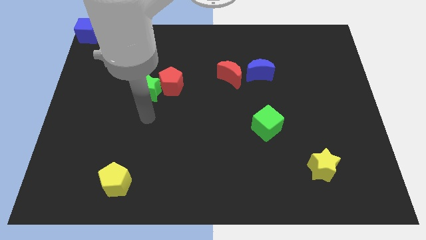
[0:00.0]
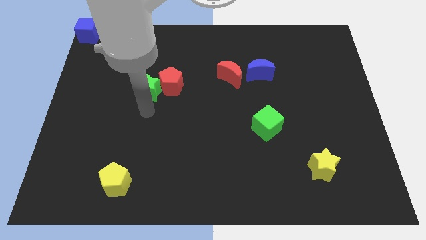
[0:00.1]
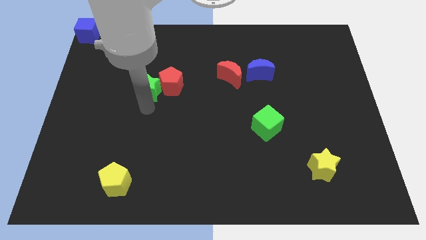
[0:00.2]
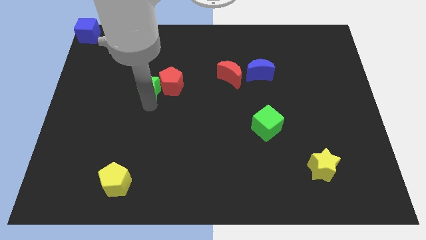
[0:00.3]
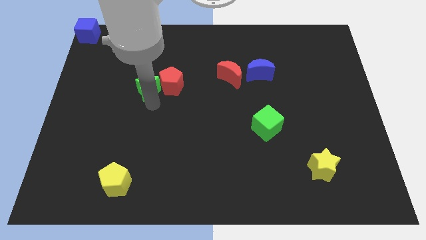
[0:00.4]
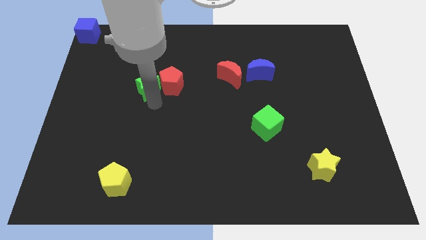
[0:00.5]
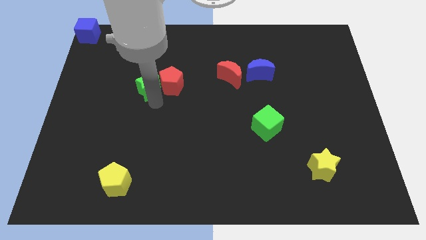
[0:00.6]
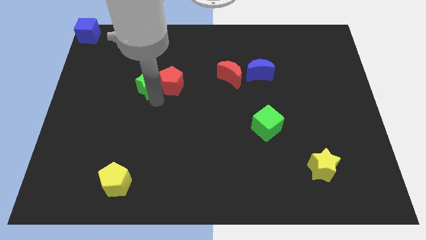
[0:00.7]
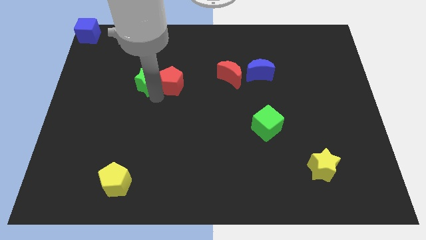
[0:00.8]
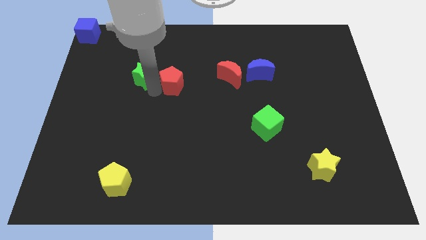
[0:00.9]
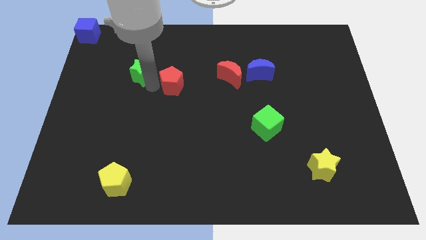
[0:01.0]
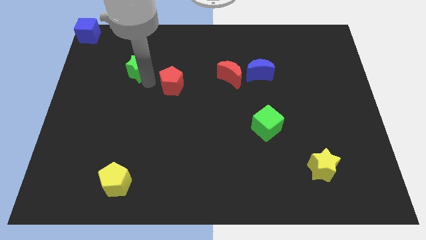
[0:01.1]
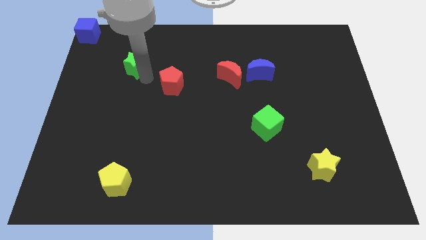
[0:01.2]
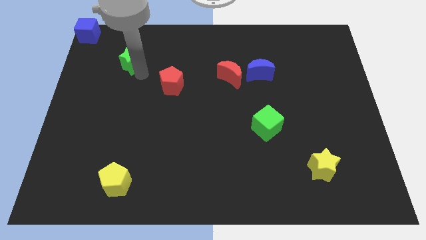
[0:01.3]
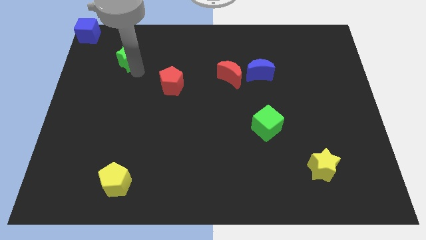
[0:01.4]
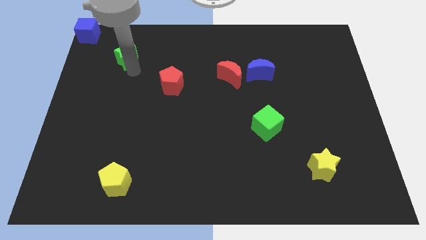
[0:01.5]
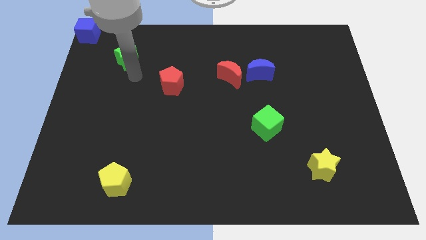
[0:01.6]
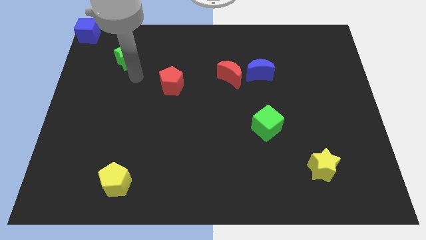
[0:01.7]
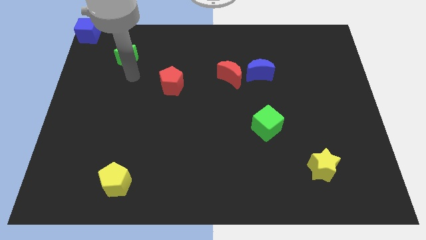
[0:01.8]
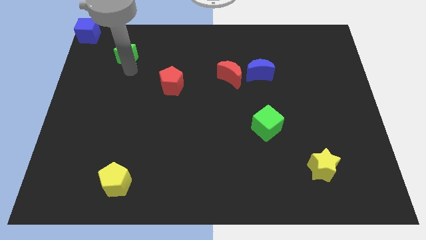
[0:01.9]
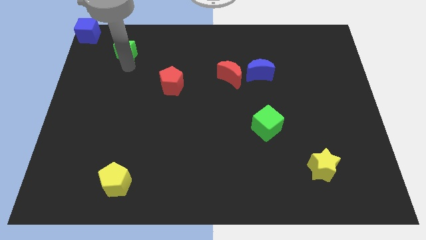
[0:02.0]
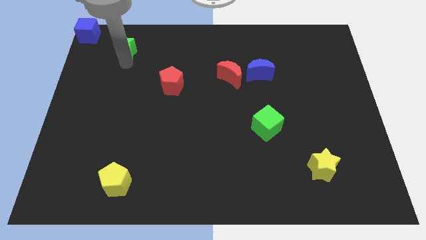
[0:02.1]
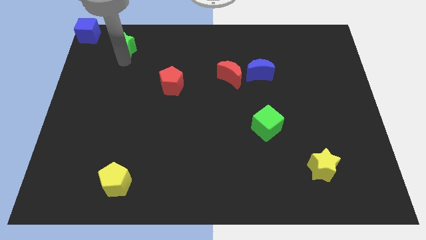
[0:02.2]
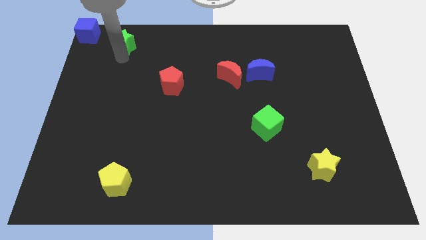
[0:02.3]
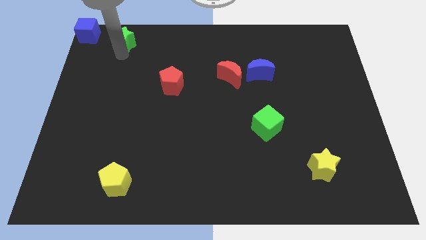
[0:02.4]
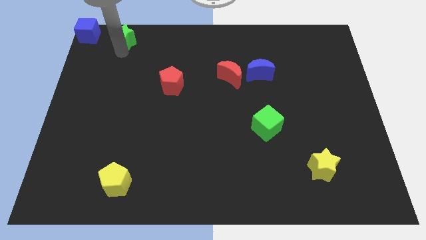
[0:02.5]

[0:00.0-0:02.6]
move the green star to the right side of the blue cube

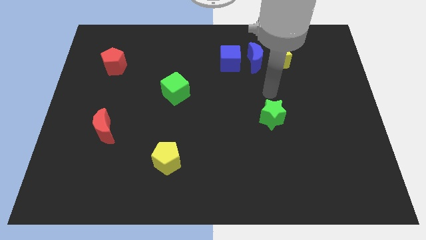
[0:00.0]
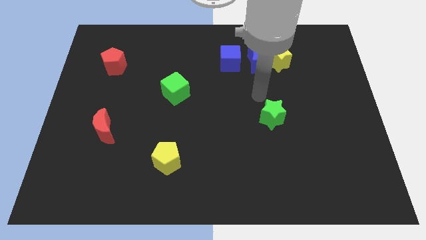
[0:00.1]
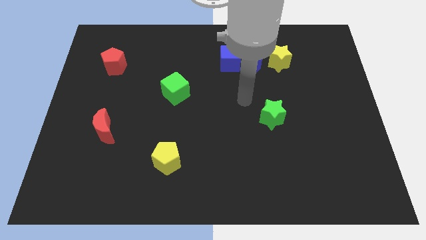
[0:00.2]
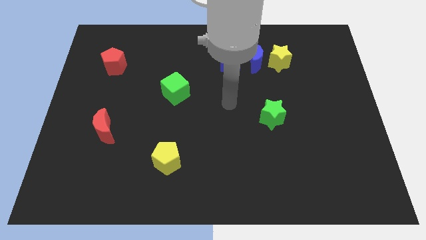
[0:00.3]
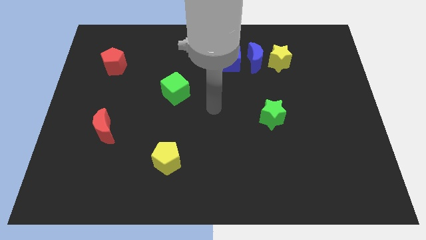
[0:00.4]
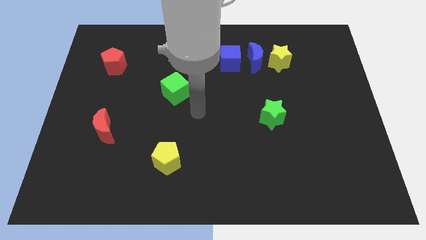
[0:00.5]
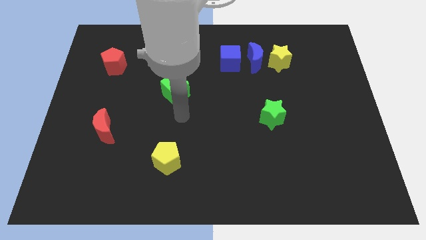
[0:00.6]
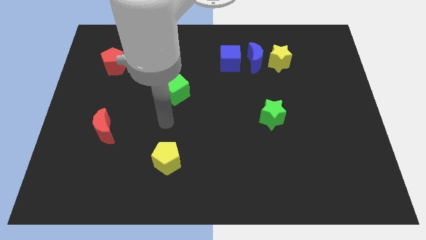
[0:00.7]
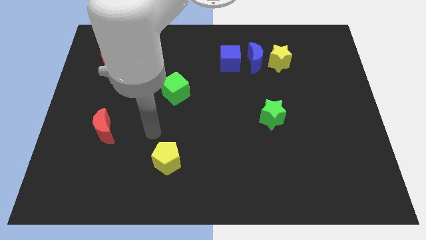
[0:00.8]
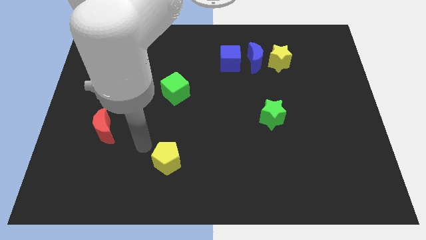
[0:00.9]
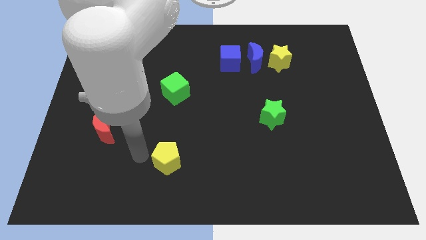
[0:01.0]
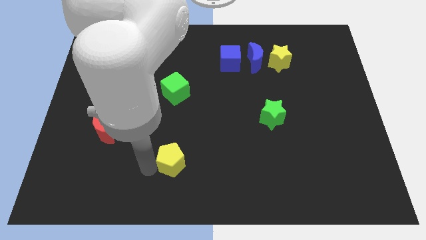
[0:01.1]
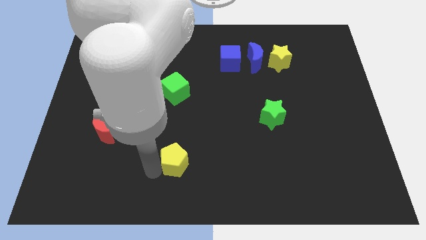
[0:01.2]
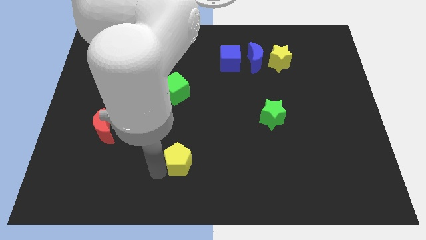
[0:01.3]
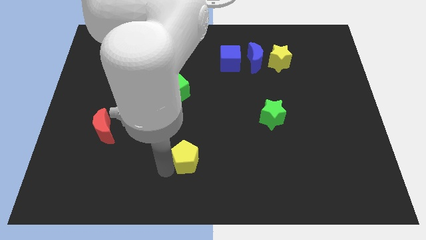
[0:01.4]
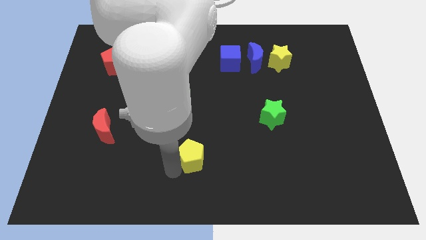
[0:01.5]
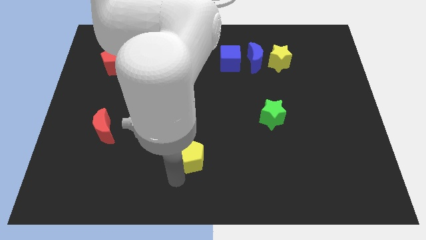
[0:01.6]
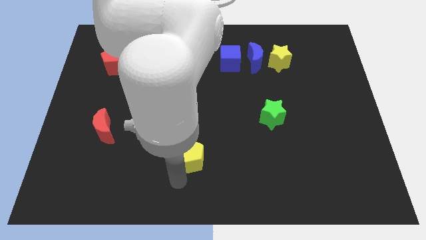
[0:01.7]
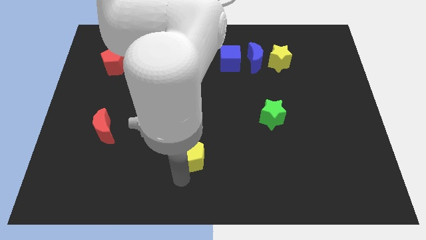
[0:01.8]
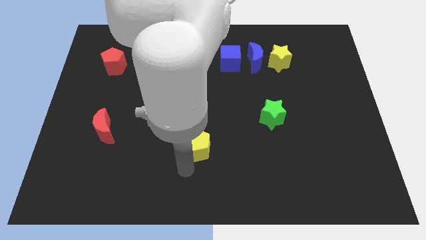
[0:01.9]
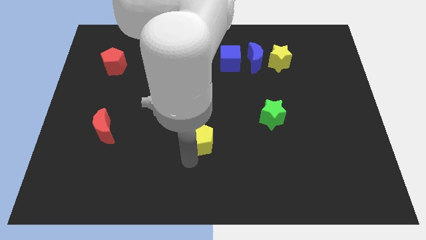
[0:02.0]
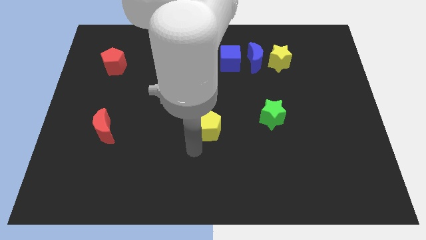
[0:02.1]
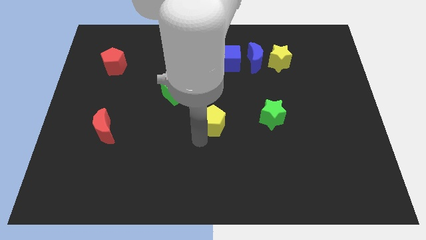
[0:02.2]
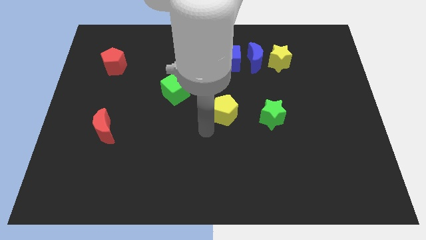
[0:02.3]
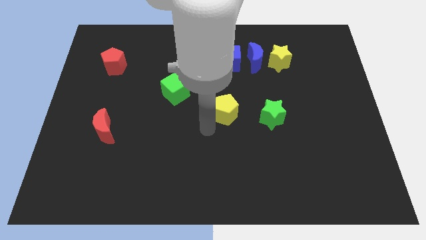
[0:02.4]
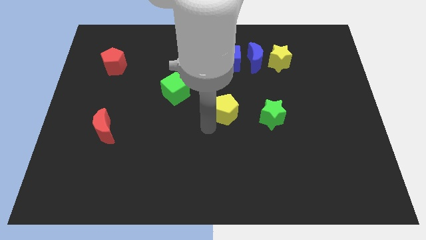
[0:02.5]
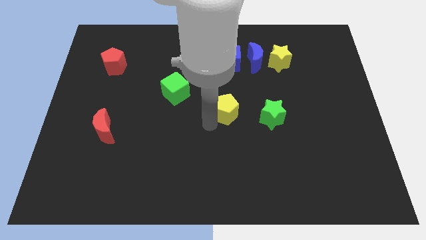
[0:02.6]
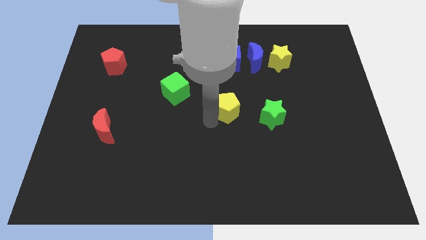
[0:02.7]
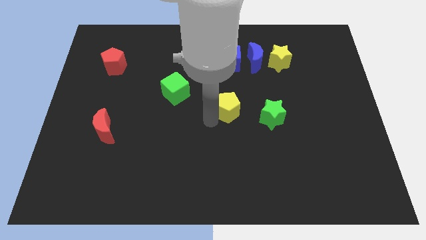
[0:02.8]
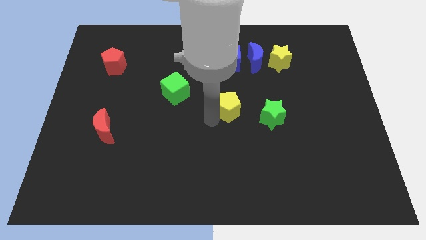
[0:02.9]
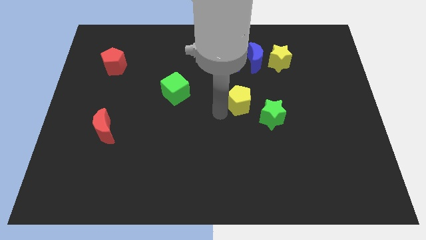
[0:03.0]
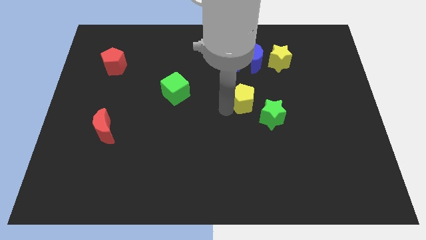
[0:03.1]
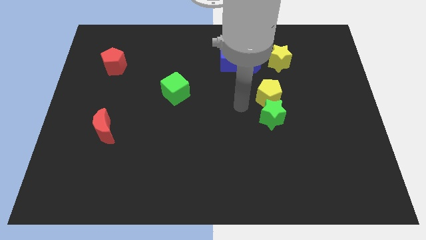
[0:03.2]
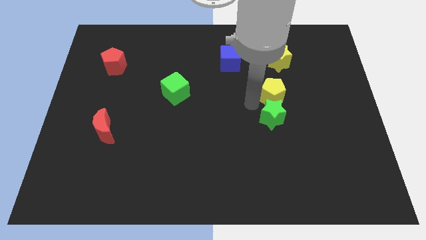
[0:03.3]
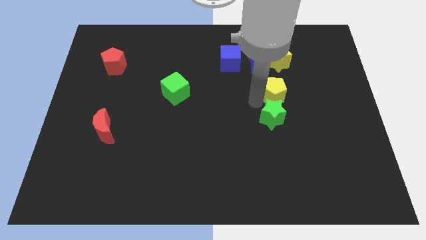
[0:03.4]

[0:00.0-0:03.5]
place the yellow pentagon above the green star

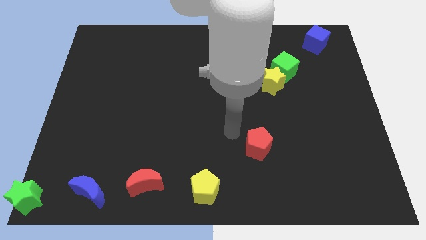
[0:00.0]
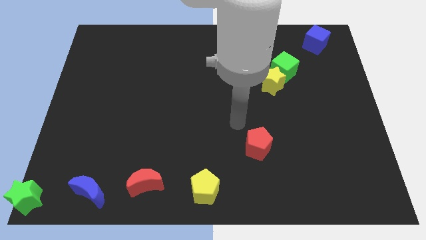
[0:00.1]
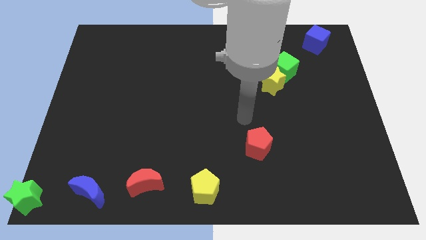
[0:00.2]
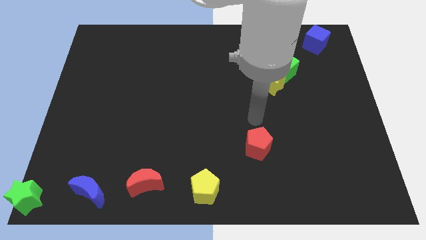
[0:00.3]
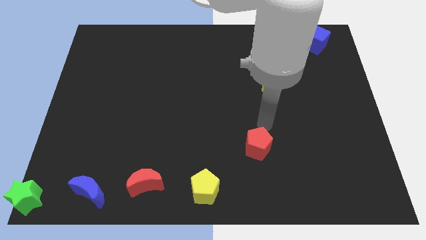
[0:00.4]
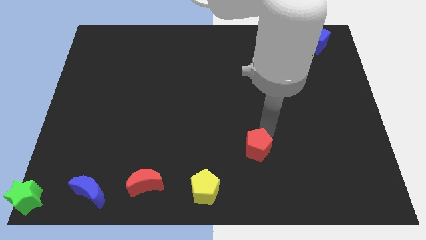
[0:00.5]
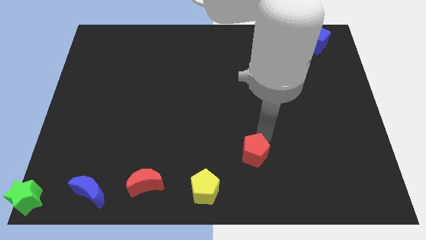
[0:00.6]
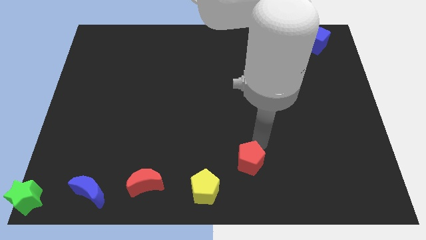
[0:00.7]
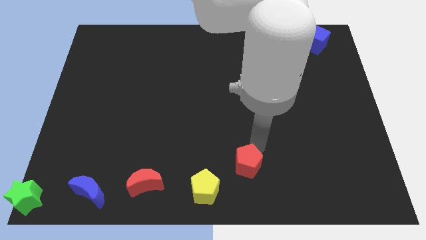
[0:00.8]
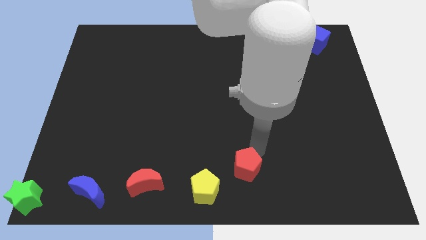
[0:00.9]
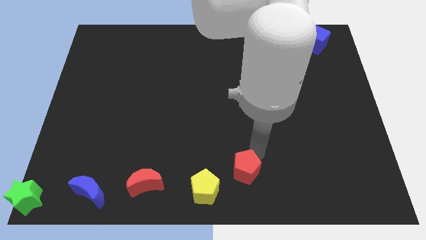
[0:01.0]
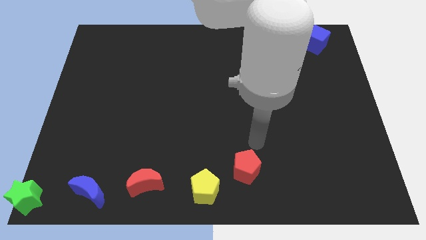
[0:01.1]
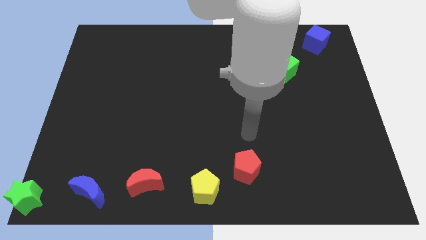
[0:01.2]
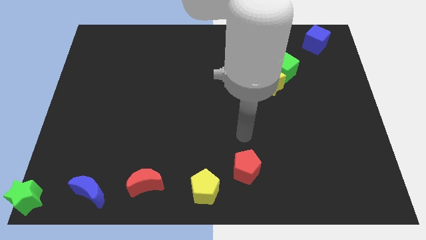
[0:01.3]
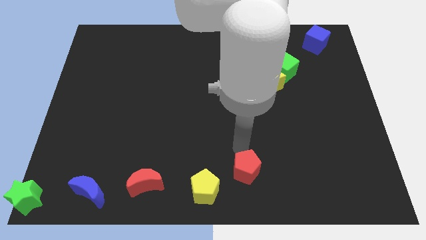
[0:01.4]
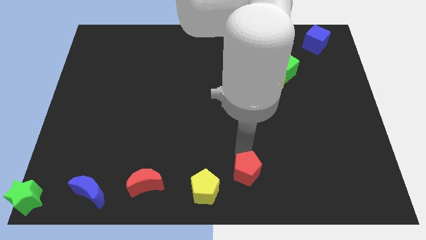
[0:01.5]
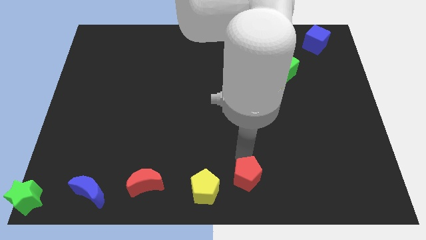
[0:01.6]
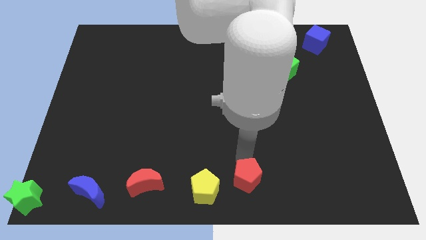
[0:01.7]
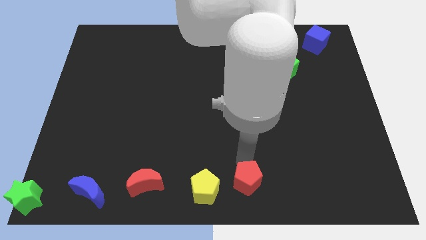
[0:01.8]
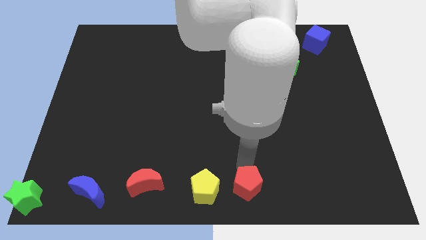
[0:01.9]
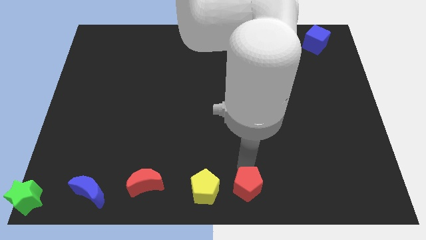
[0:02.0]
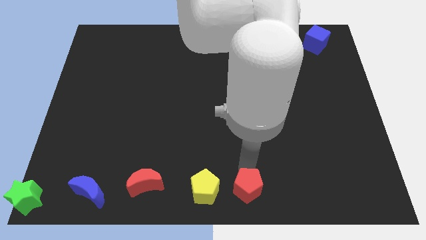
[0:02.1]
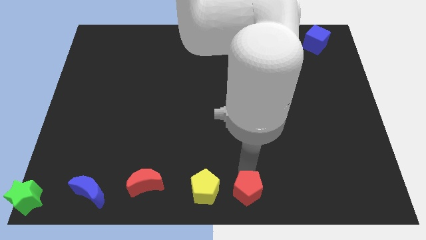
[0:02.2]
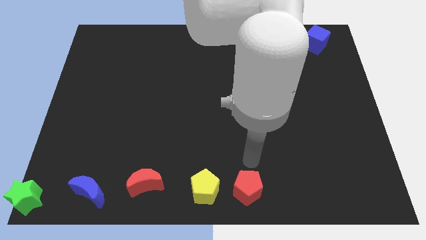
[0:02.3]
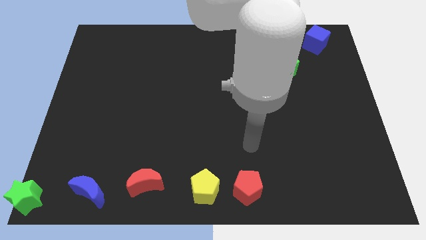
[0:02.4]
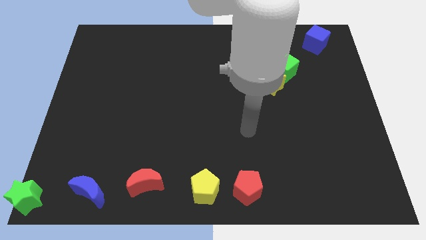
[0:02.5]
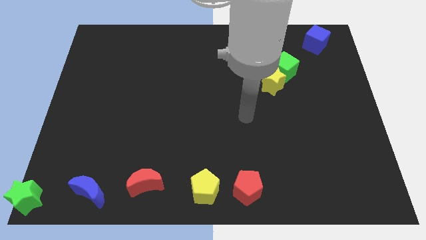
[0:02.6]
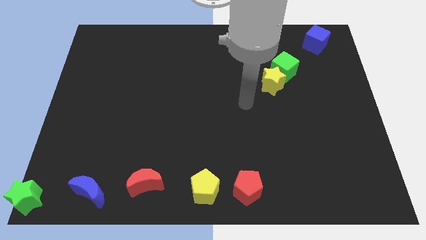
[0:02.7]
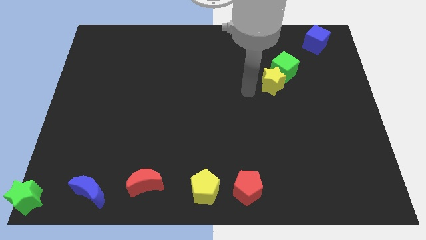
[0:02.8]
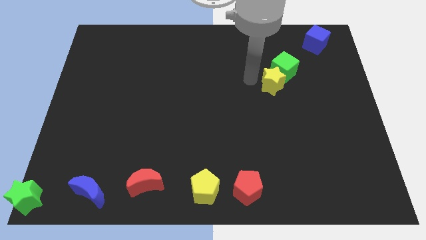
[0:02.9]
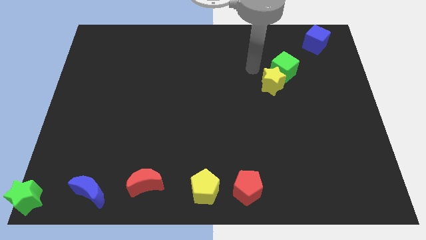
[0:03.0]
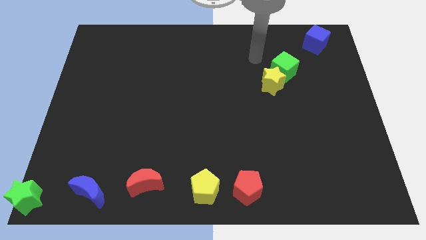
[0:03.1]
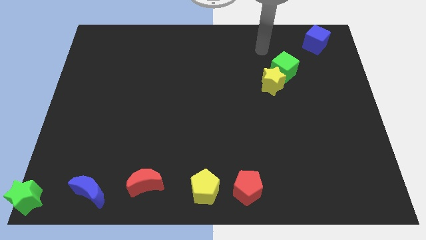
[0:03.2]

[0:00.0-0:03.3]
place red pentagon to the right of yellow pentagon
